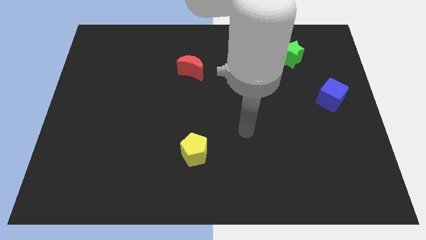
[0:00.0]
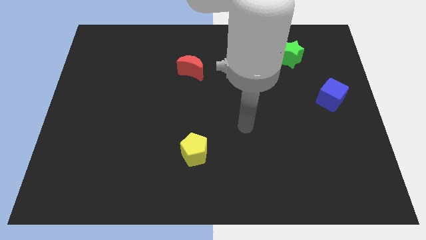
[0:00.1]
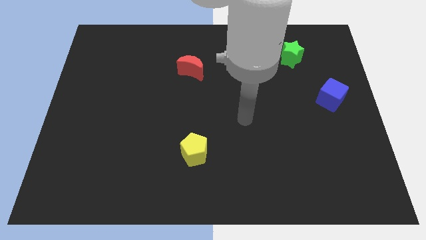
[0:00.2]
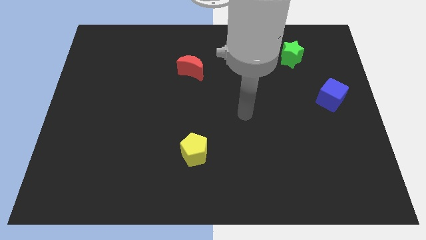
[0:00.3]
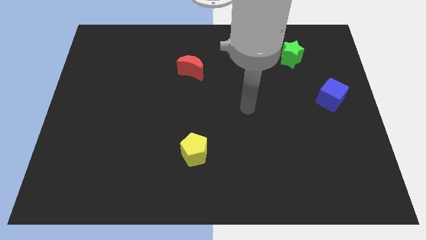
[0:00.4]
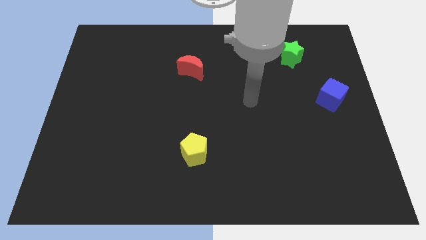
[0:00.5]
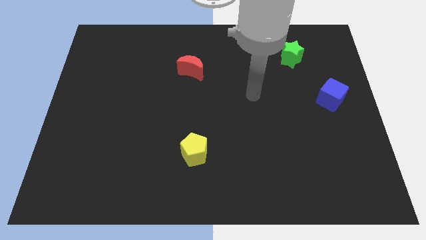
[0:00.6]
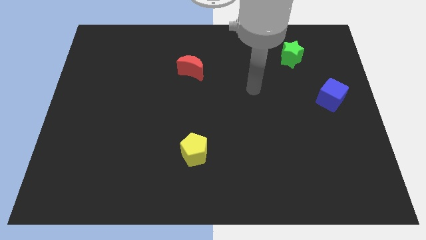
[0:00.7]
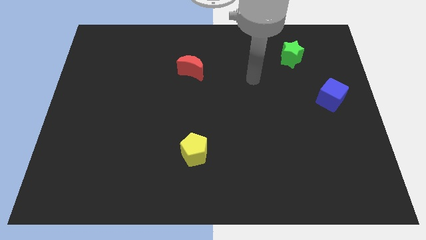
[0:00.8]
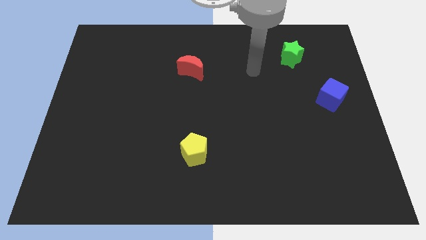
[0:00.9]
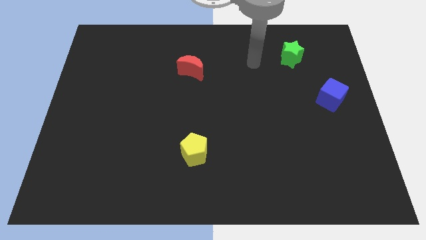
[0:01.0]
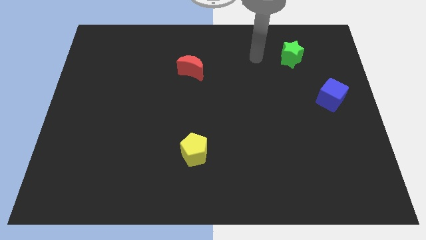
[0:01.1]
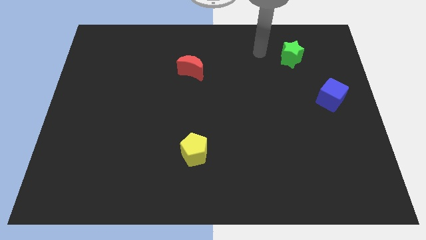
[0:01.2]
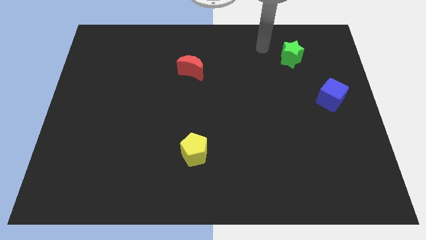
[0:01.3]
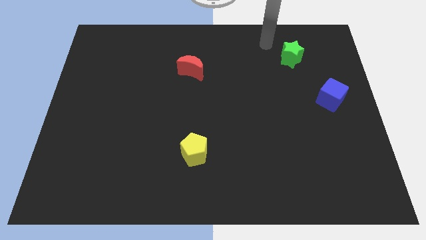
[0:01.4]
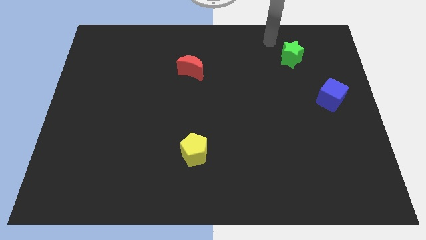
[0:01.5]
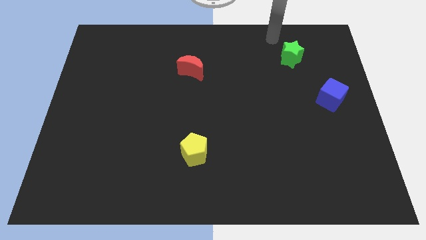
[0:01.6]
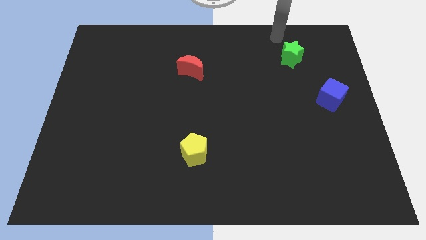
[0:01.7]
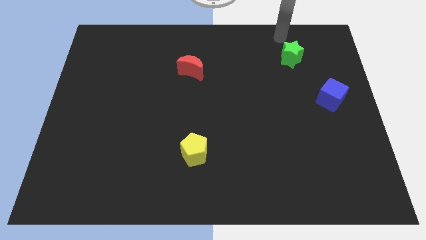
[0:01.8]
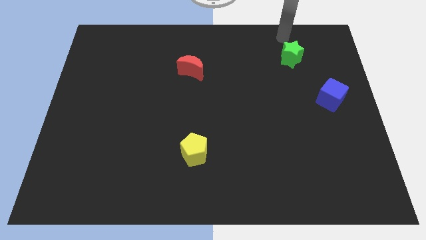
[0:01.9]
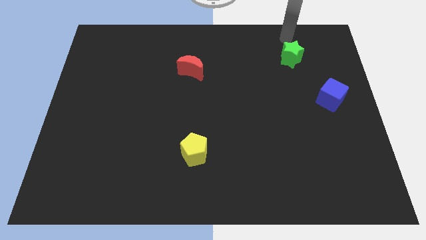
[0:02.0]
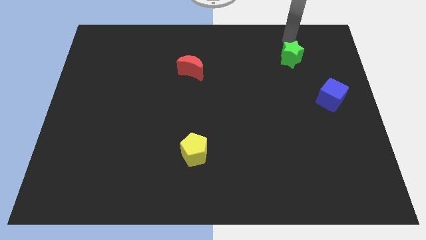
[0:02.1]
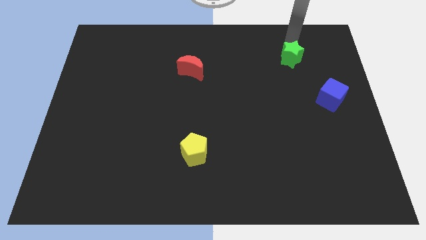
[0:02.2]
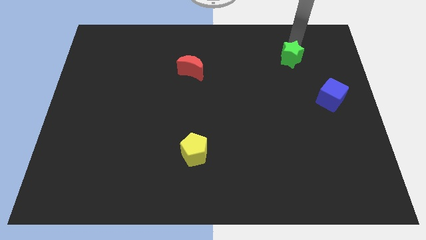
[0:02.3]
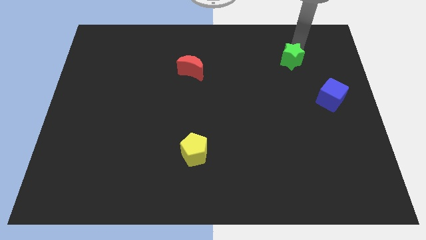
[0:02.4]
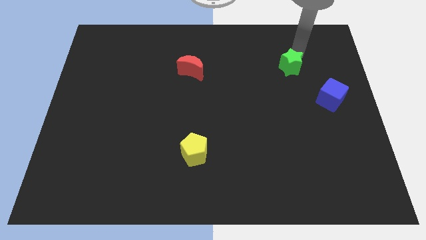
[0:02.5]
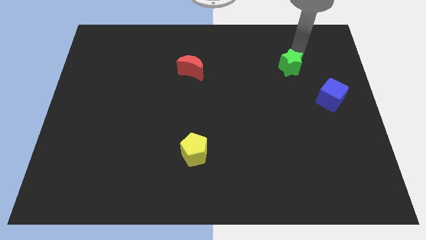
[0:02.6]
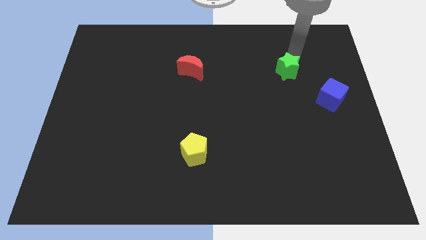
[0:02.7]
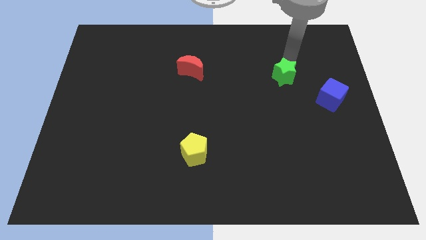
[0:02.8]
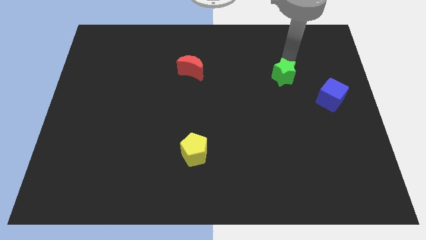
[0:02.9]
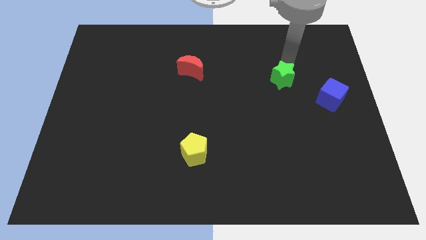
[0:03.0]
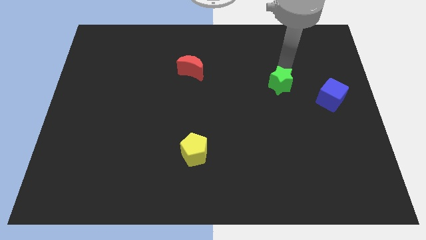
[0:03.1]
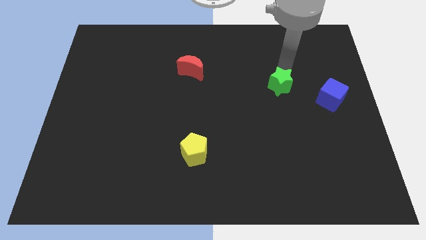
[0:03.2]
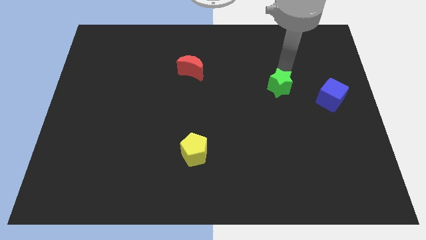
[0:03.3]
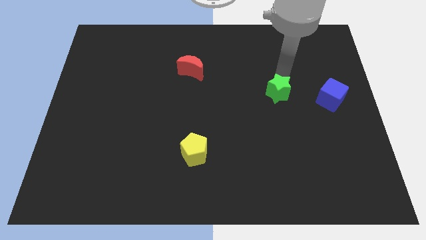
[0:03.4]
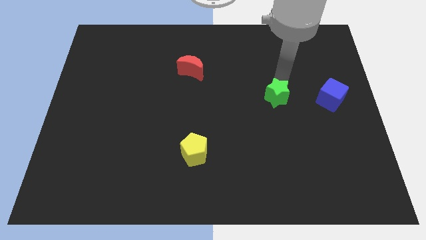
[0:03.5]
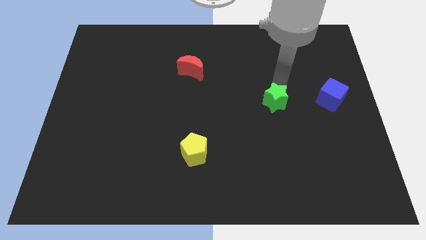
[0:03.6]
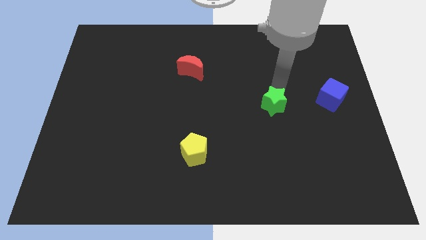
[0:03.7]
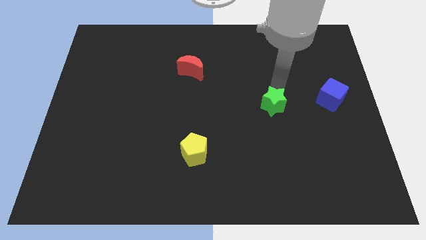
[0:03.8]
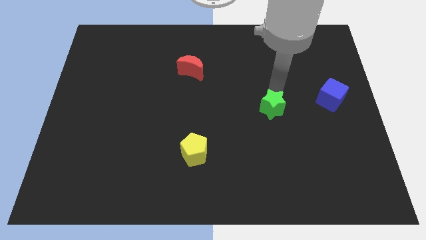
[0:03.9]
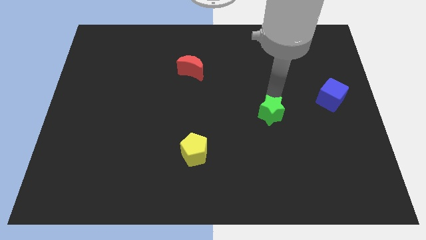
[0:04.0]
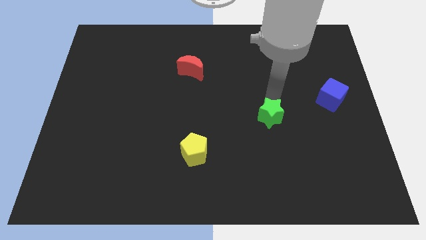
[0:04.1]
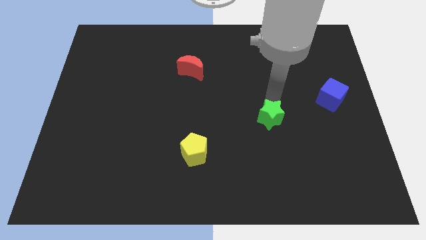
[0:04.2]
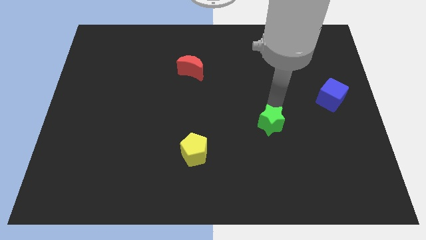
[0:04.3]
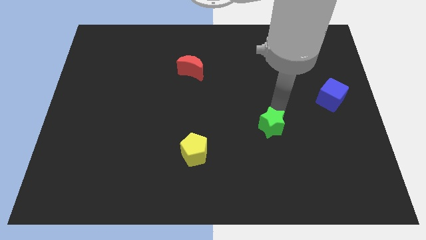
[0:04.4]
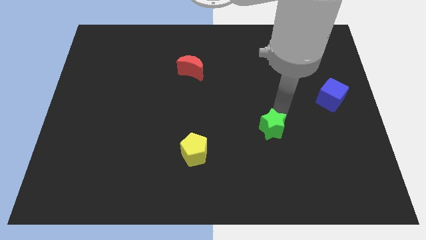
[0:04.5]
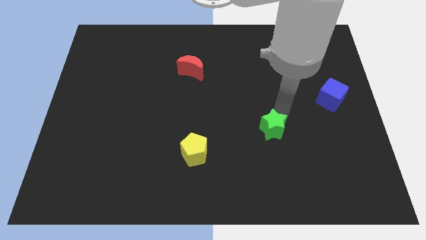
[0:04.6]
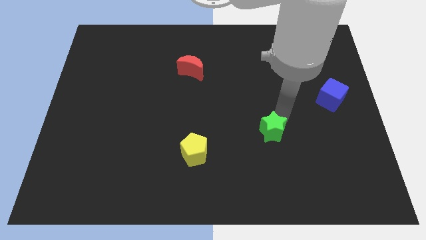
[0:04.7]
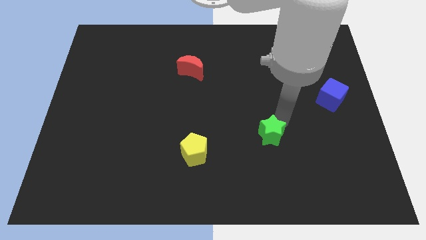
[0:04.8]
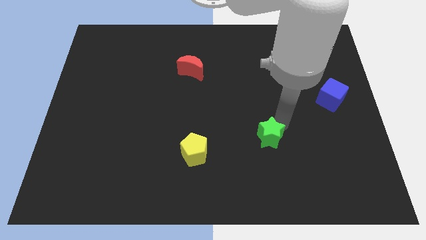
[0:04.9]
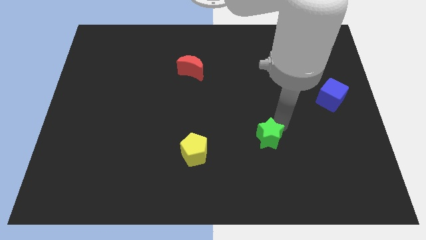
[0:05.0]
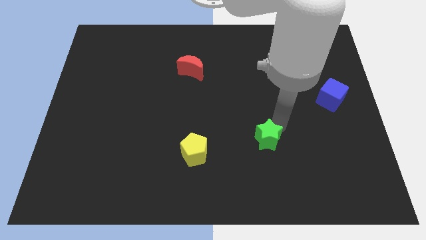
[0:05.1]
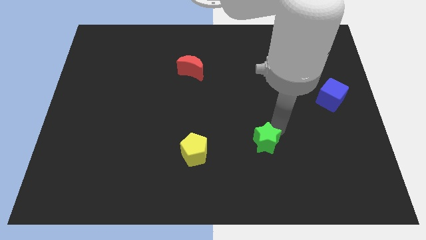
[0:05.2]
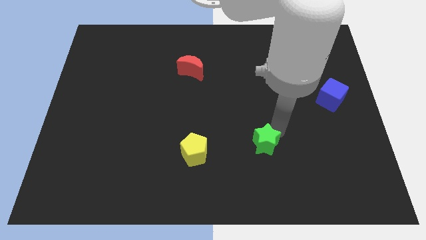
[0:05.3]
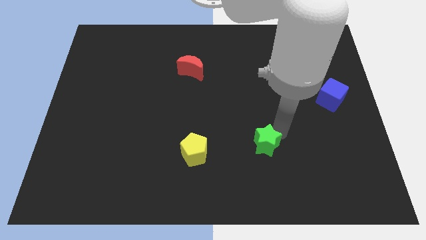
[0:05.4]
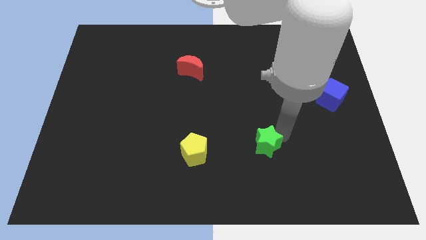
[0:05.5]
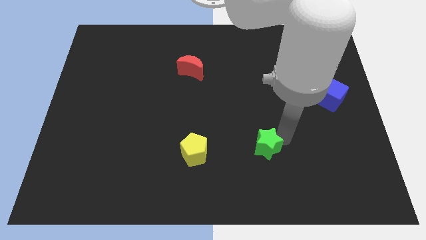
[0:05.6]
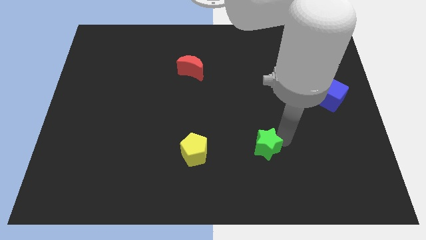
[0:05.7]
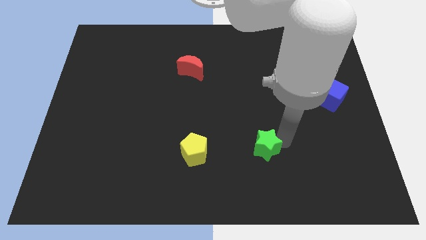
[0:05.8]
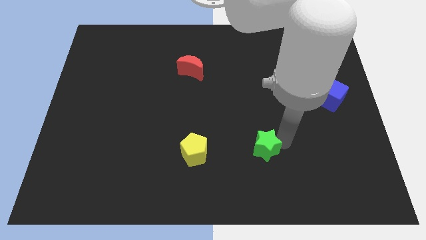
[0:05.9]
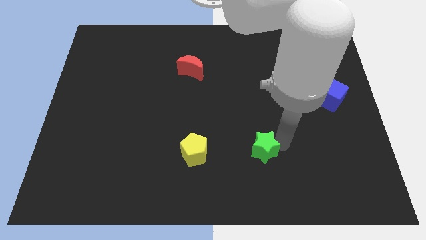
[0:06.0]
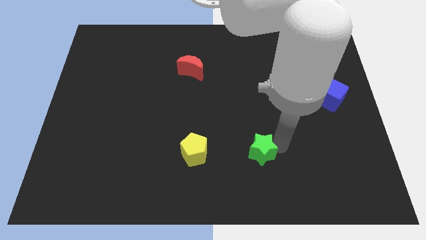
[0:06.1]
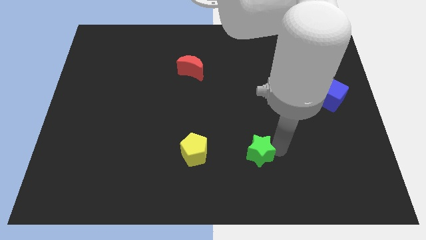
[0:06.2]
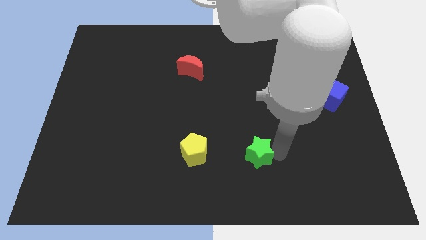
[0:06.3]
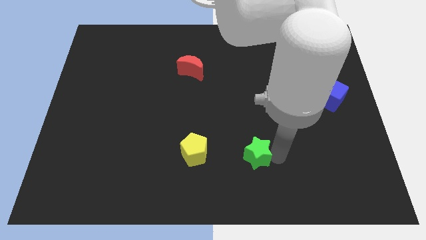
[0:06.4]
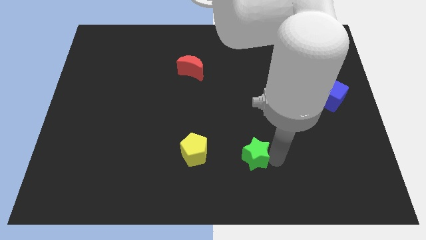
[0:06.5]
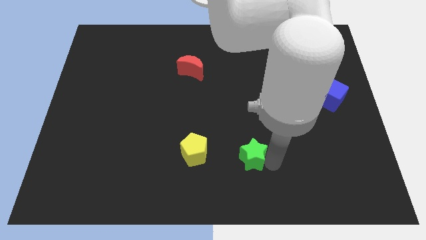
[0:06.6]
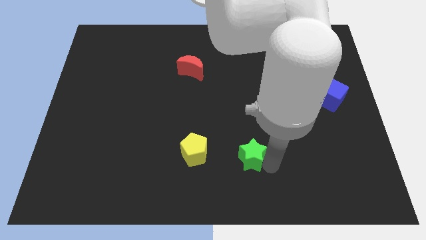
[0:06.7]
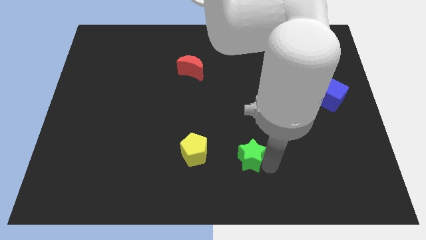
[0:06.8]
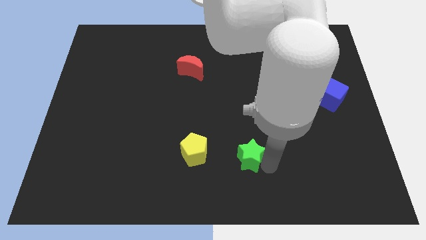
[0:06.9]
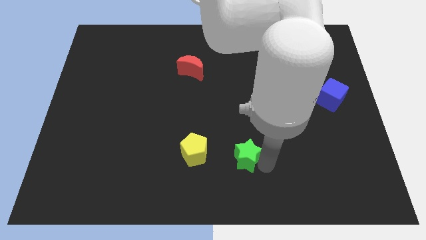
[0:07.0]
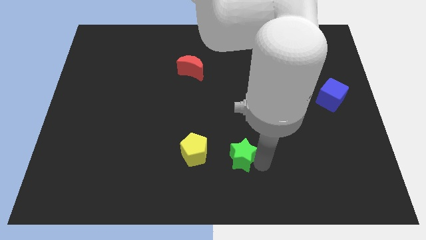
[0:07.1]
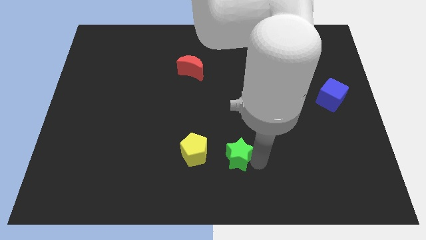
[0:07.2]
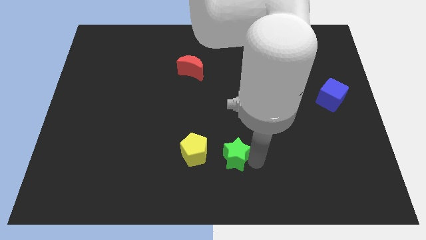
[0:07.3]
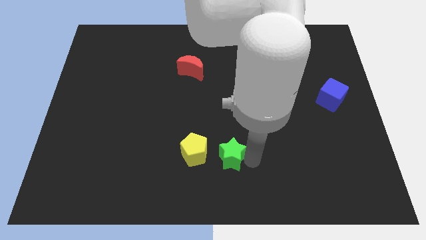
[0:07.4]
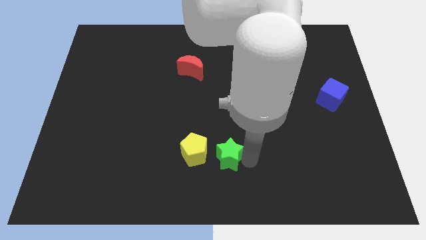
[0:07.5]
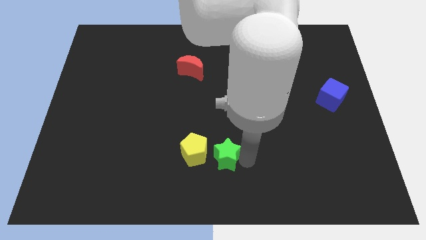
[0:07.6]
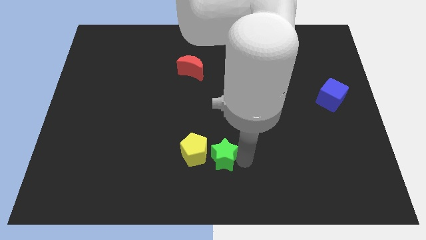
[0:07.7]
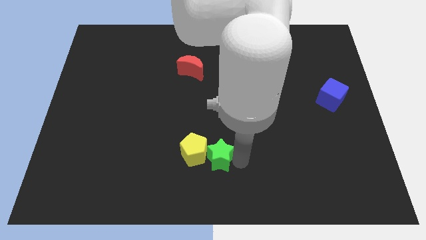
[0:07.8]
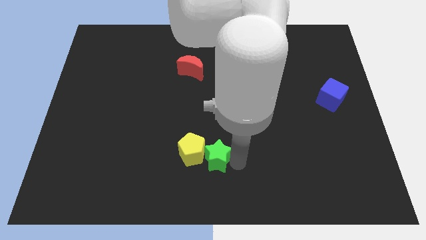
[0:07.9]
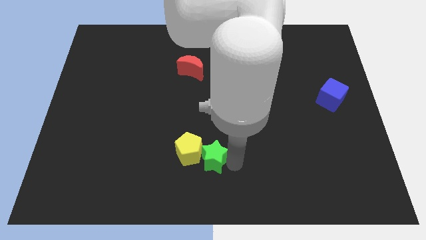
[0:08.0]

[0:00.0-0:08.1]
slide the star to the pentagon
